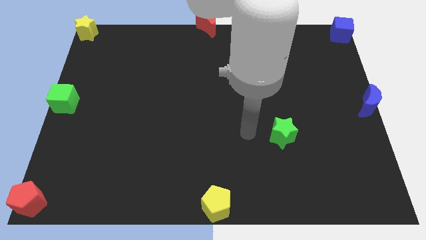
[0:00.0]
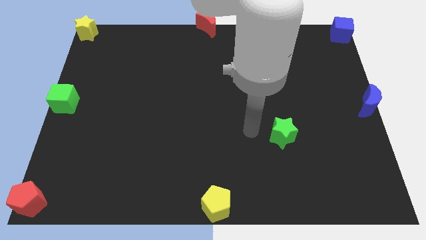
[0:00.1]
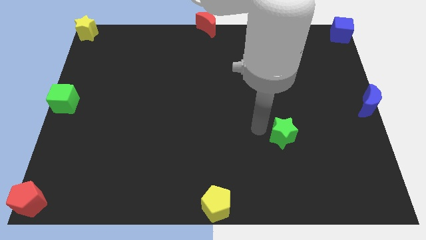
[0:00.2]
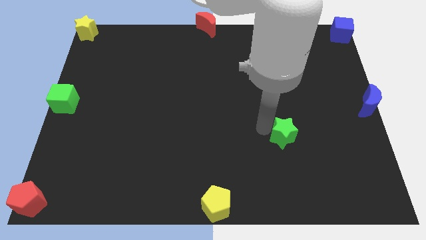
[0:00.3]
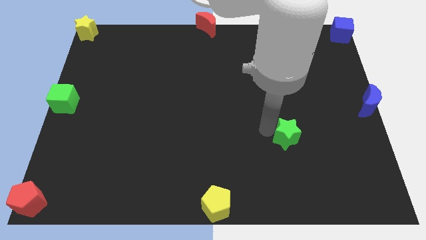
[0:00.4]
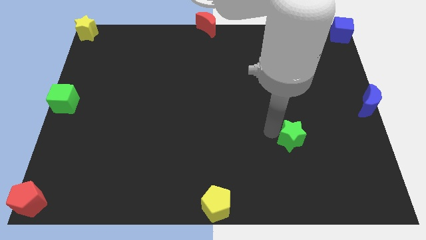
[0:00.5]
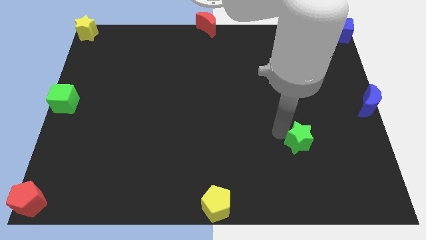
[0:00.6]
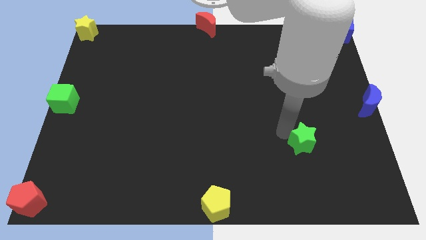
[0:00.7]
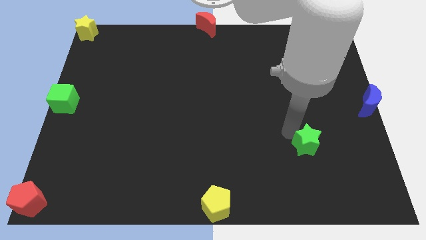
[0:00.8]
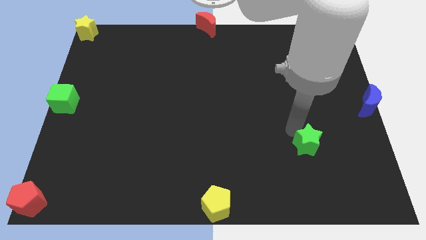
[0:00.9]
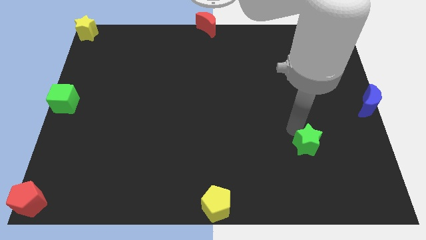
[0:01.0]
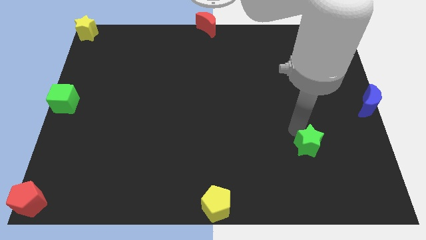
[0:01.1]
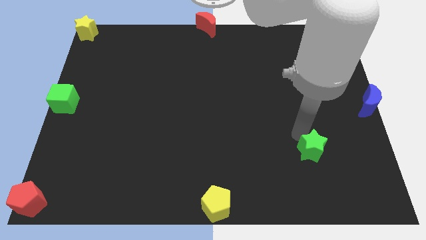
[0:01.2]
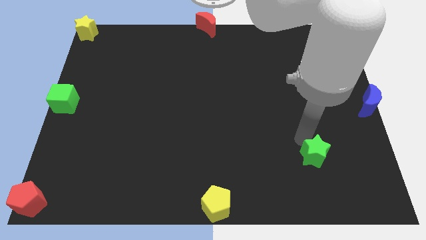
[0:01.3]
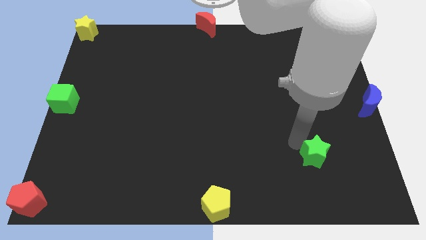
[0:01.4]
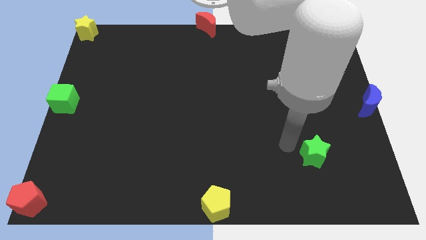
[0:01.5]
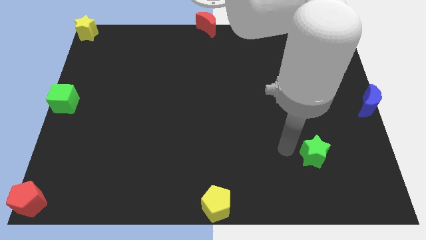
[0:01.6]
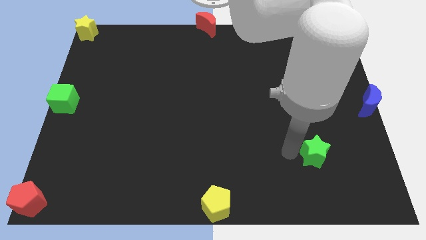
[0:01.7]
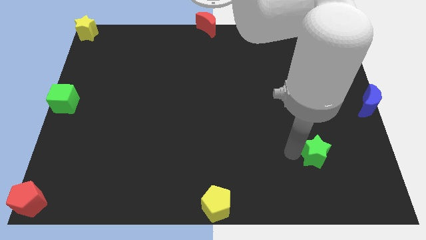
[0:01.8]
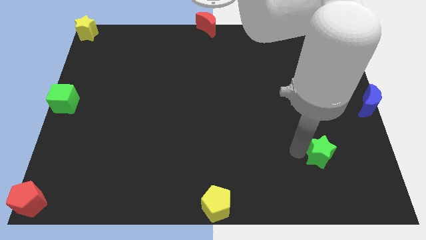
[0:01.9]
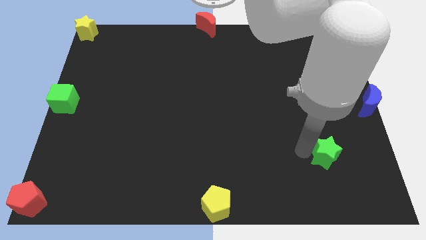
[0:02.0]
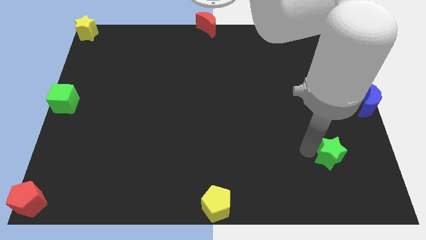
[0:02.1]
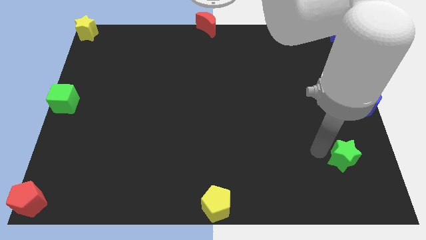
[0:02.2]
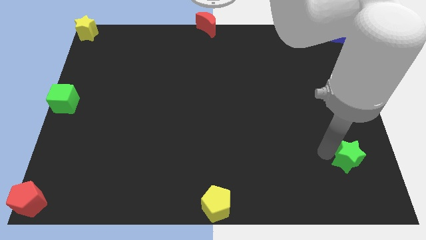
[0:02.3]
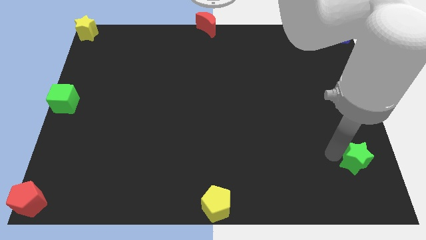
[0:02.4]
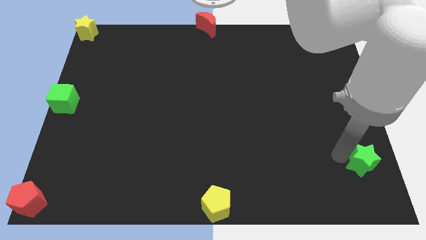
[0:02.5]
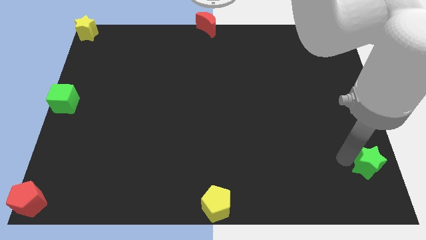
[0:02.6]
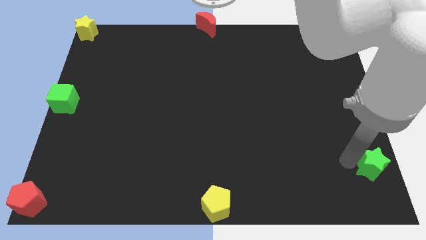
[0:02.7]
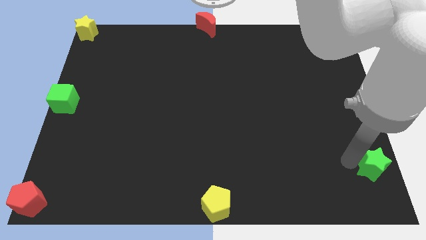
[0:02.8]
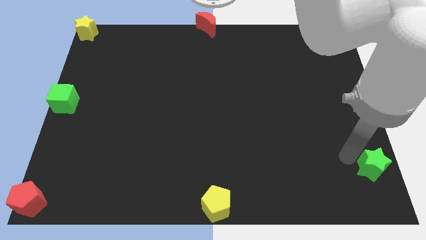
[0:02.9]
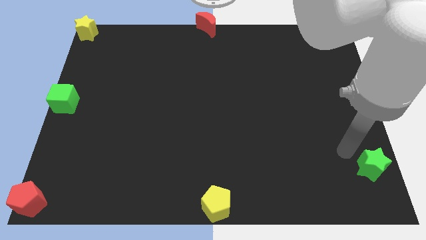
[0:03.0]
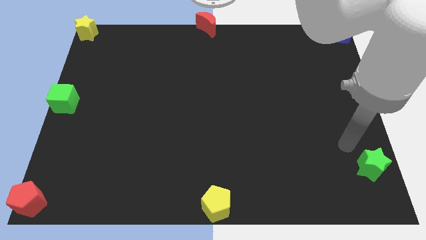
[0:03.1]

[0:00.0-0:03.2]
move the green star to the bottom right of the board

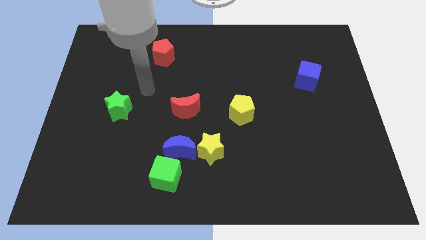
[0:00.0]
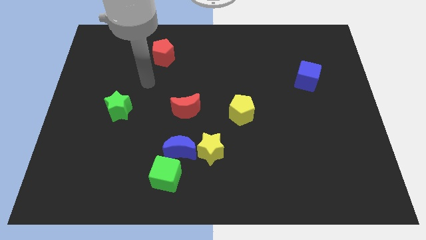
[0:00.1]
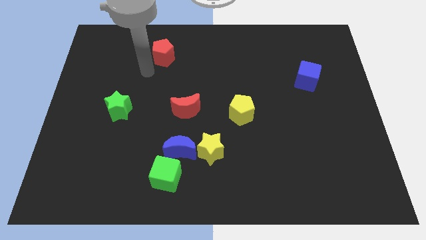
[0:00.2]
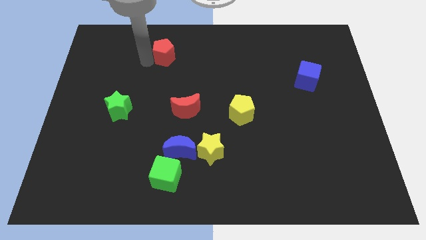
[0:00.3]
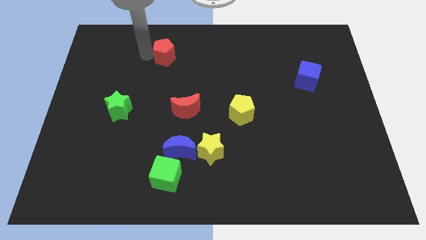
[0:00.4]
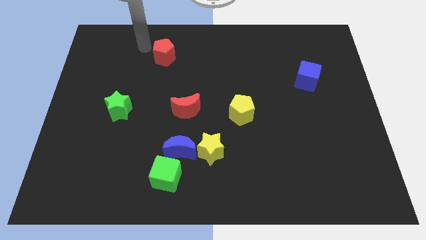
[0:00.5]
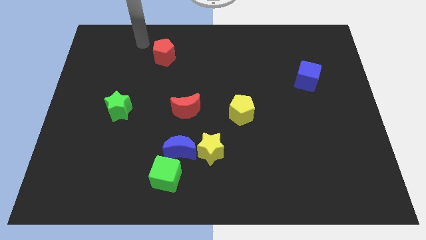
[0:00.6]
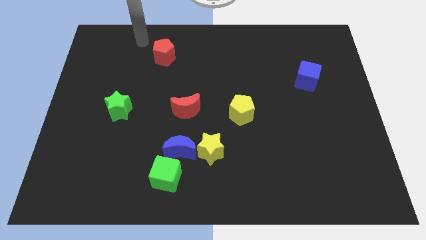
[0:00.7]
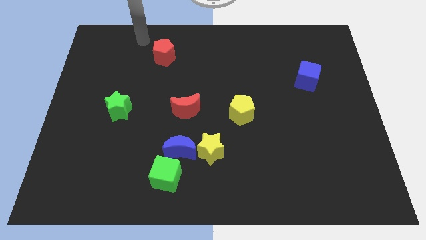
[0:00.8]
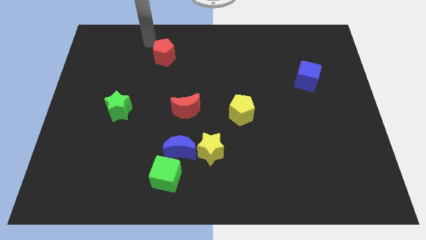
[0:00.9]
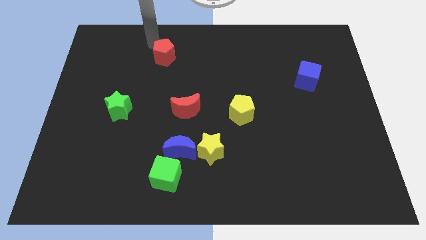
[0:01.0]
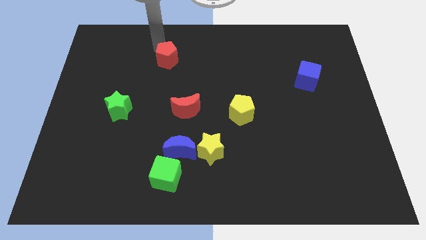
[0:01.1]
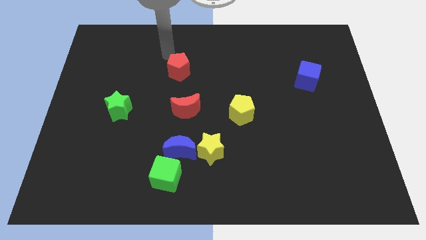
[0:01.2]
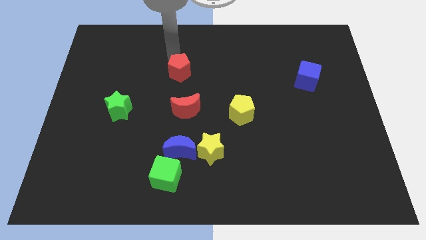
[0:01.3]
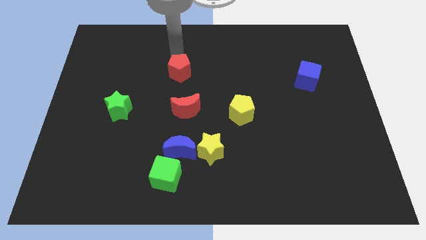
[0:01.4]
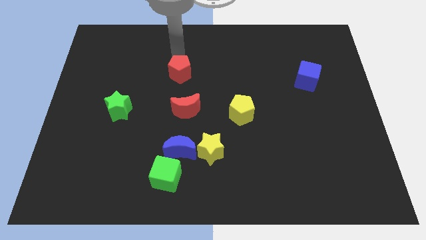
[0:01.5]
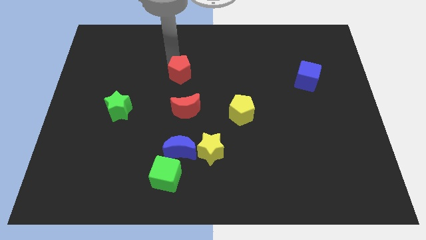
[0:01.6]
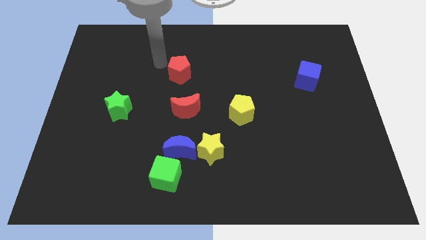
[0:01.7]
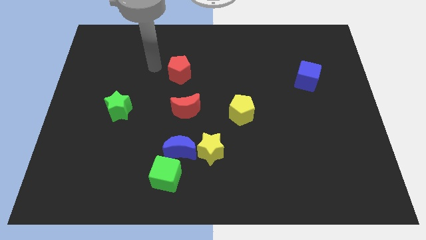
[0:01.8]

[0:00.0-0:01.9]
push the red pentagon to the top of the red moon

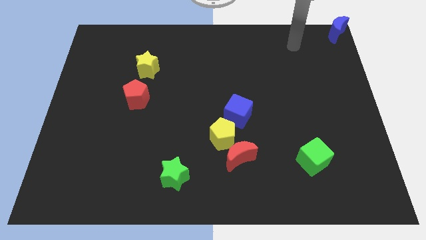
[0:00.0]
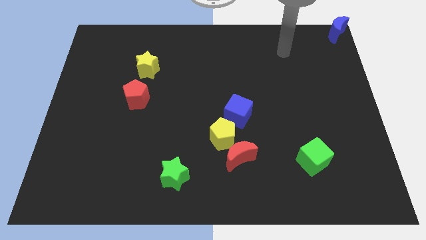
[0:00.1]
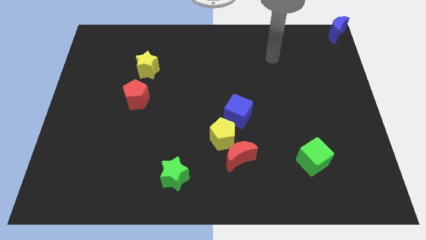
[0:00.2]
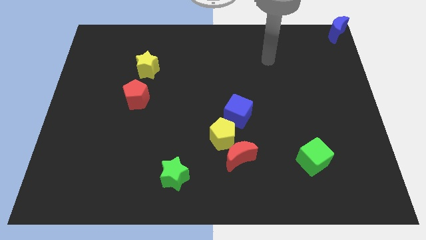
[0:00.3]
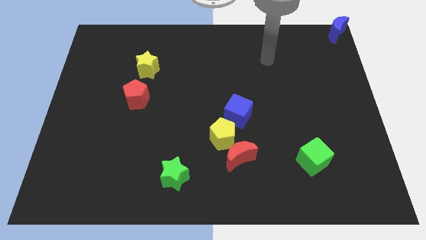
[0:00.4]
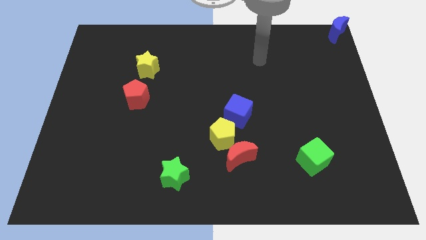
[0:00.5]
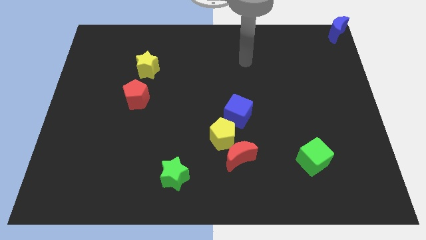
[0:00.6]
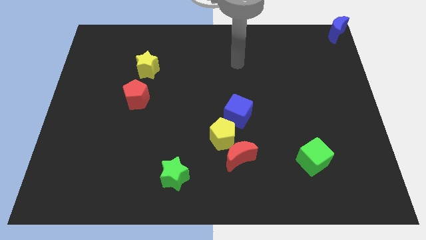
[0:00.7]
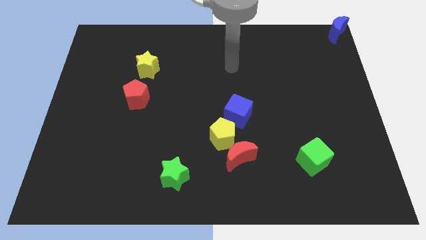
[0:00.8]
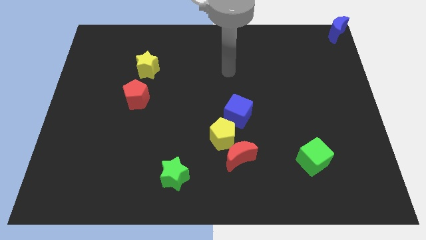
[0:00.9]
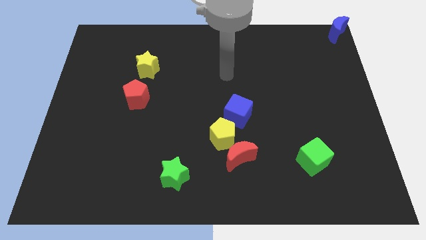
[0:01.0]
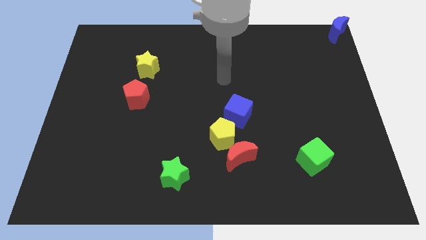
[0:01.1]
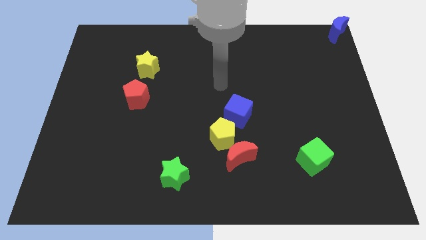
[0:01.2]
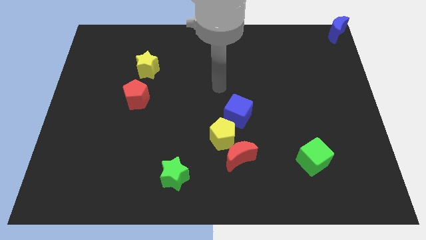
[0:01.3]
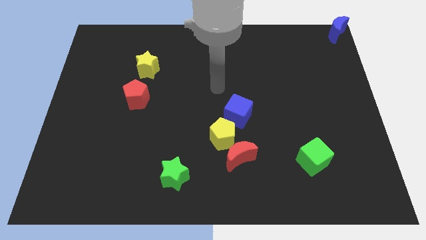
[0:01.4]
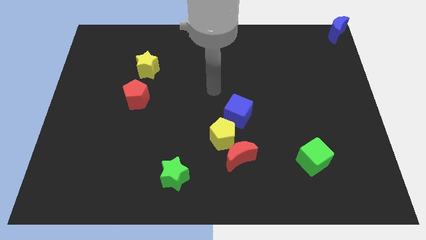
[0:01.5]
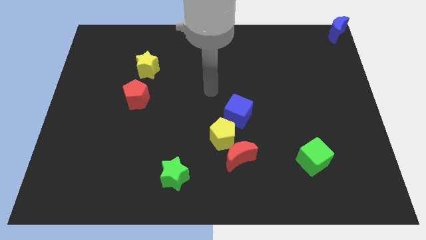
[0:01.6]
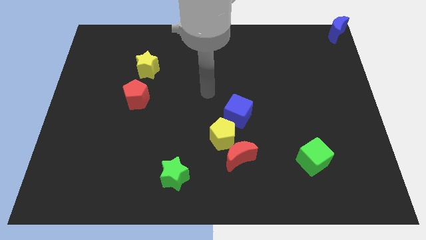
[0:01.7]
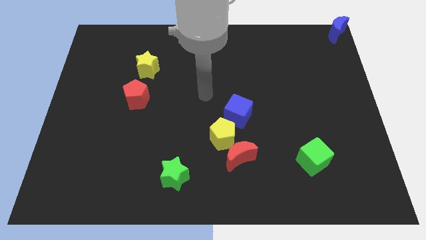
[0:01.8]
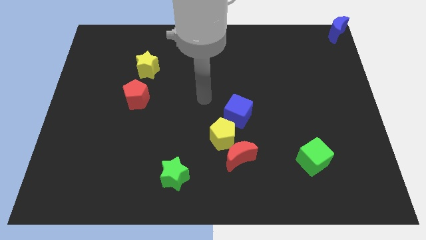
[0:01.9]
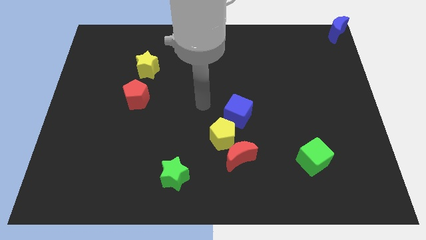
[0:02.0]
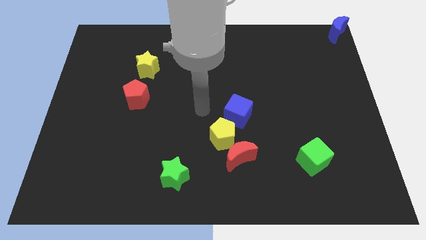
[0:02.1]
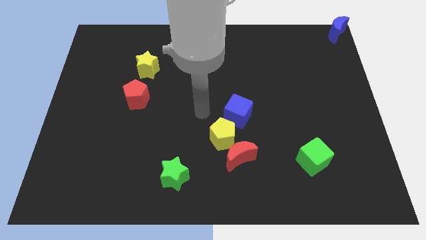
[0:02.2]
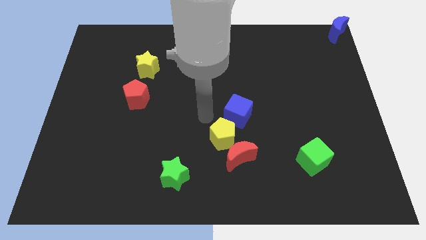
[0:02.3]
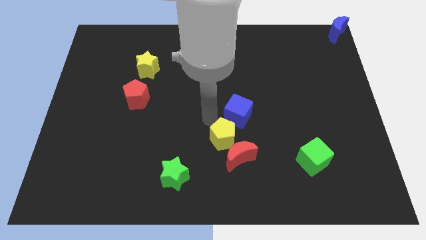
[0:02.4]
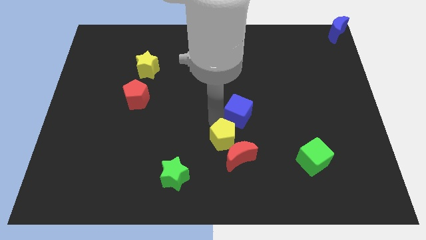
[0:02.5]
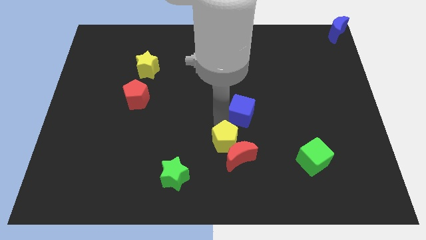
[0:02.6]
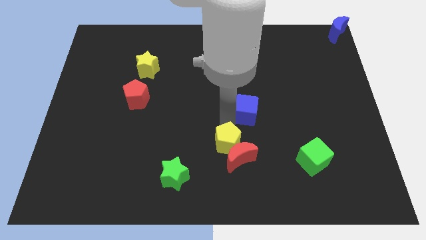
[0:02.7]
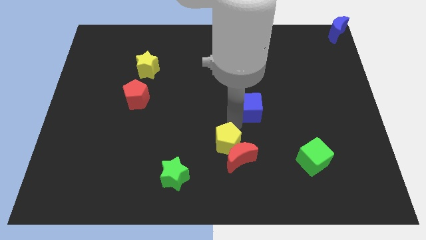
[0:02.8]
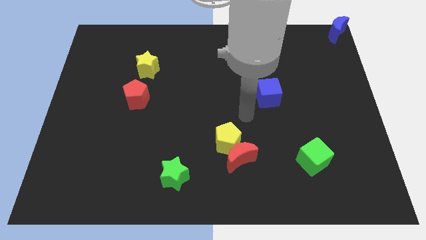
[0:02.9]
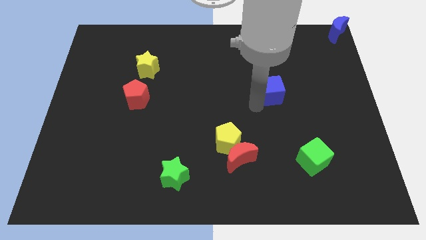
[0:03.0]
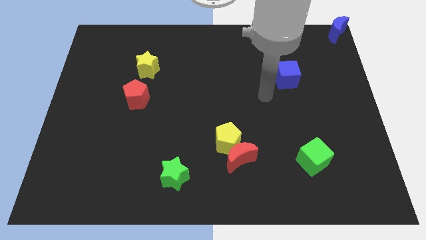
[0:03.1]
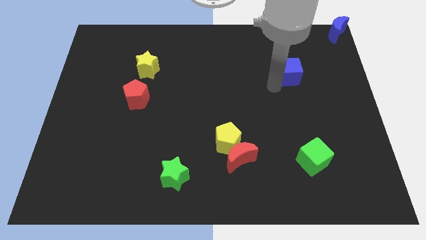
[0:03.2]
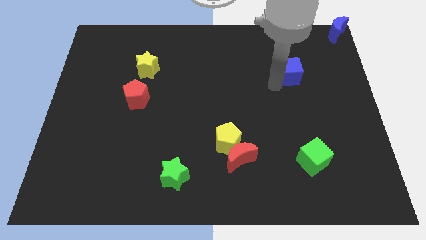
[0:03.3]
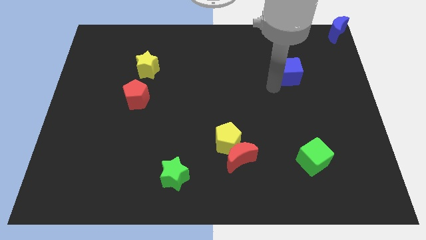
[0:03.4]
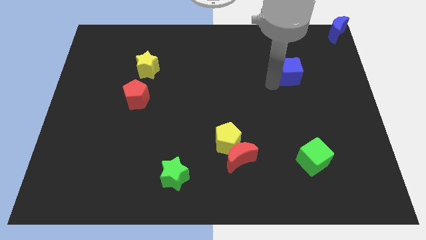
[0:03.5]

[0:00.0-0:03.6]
separate the blue cube from the yellow pentagon

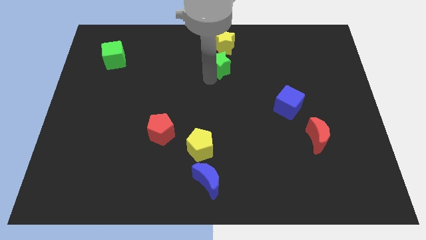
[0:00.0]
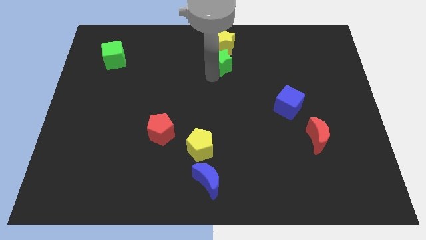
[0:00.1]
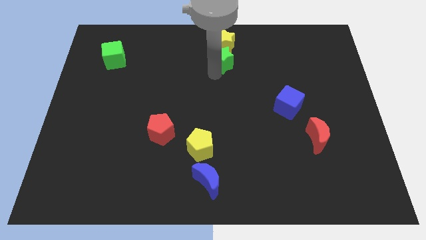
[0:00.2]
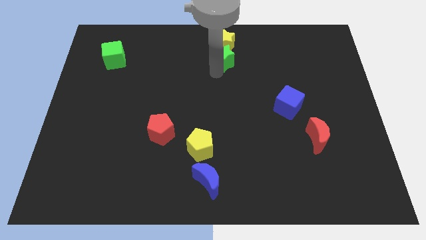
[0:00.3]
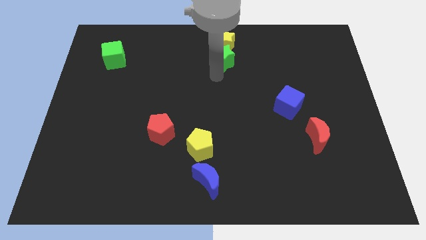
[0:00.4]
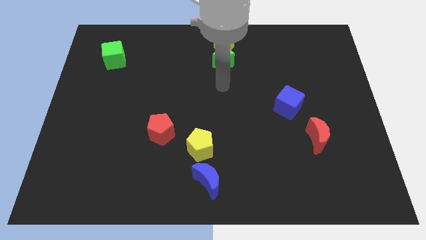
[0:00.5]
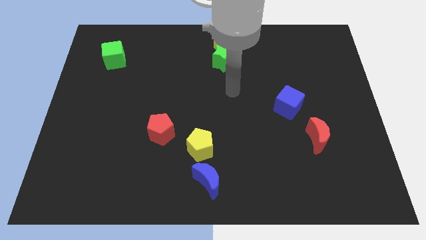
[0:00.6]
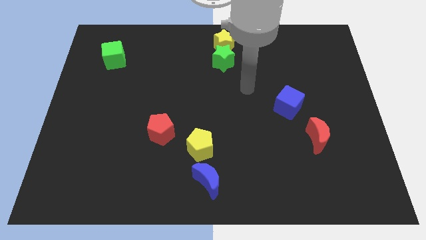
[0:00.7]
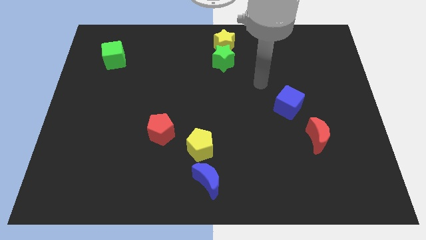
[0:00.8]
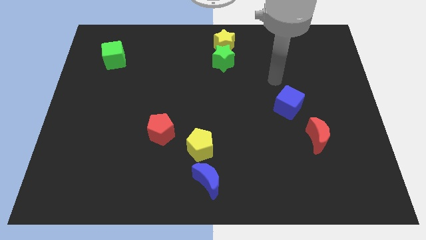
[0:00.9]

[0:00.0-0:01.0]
place the green star below the yellow star
